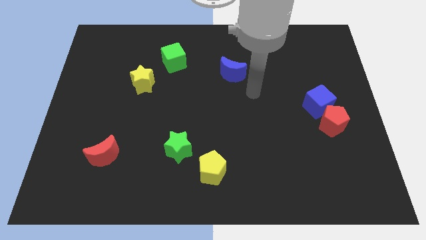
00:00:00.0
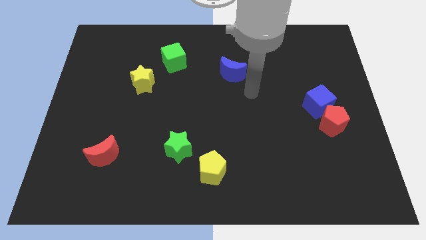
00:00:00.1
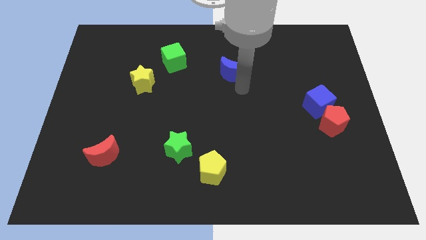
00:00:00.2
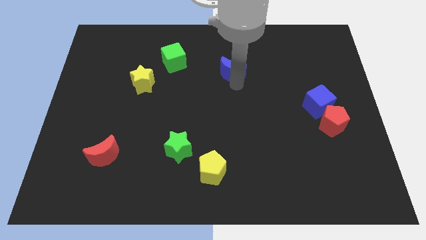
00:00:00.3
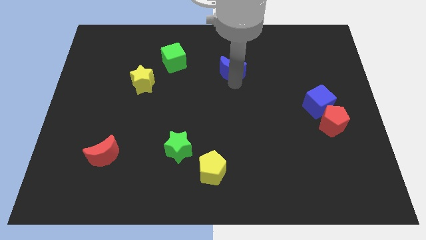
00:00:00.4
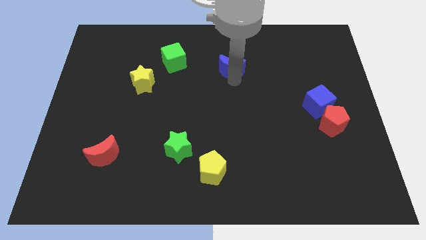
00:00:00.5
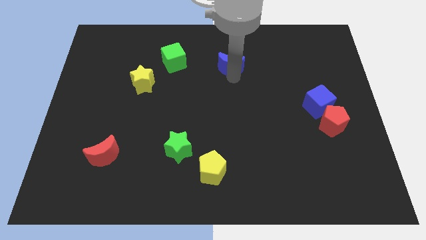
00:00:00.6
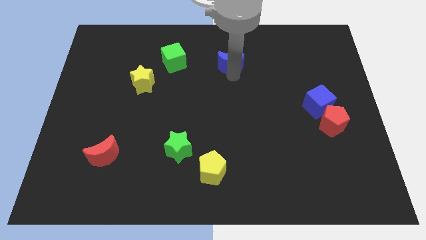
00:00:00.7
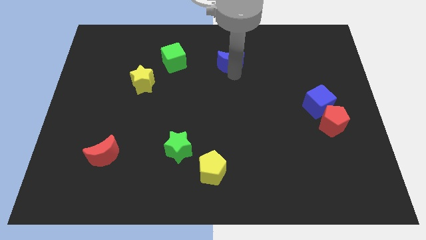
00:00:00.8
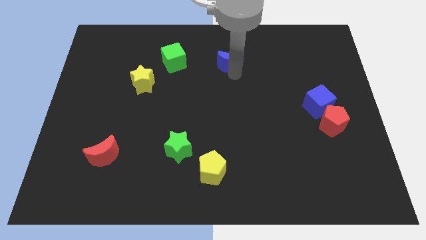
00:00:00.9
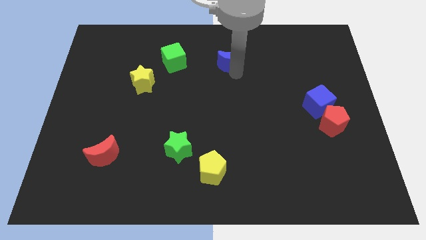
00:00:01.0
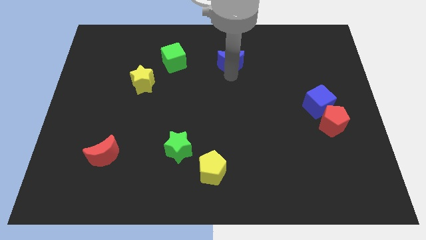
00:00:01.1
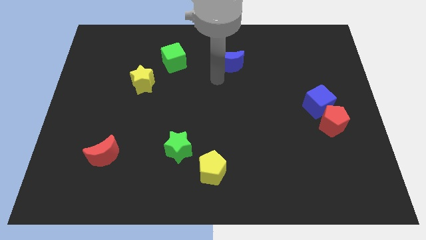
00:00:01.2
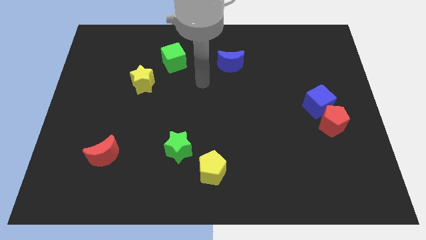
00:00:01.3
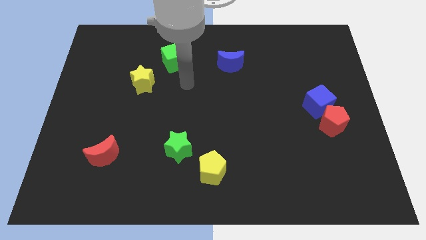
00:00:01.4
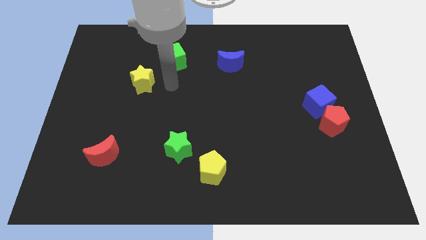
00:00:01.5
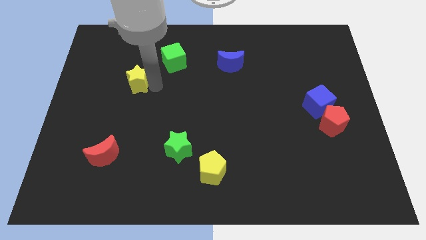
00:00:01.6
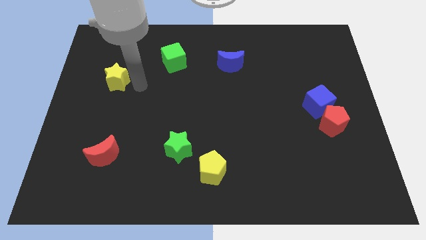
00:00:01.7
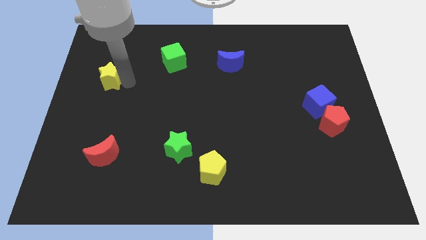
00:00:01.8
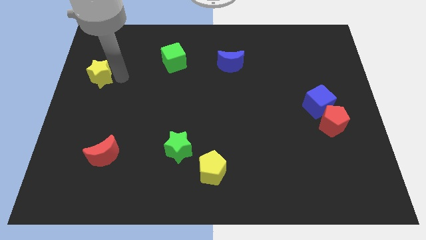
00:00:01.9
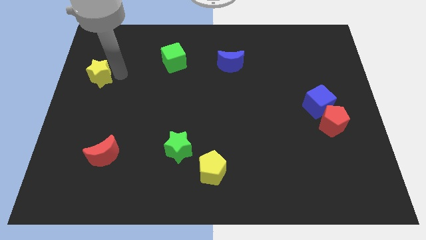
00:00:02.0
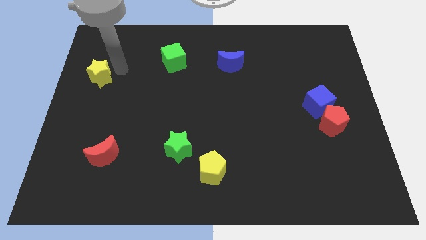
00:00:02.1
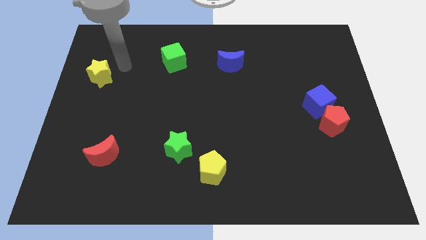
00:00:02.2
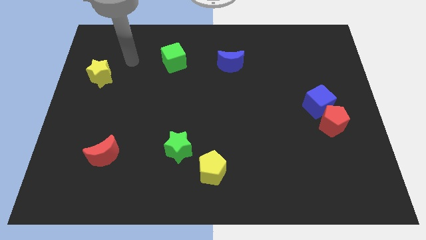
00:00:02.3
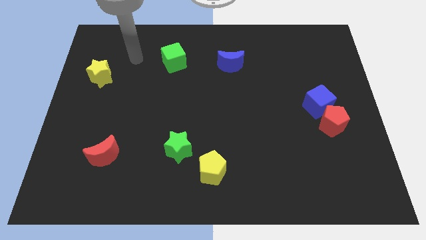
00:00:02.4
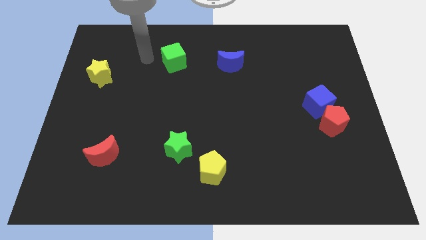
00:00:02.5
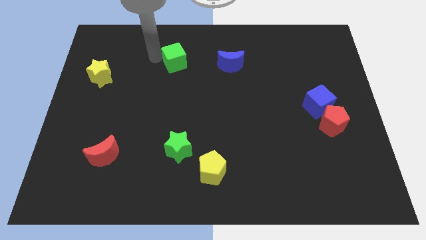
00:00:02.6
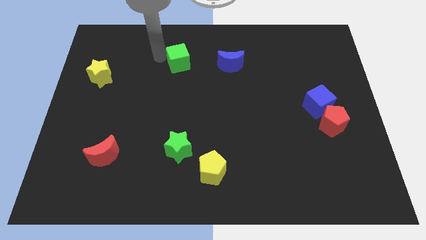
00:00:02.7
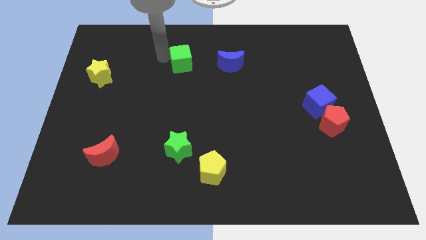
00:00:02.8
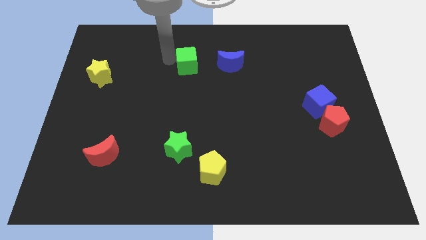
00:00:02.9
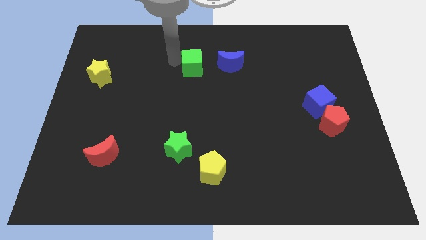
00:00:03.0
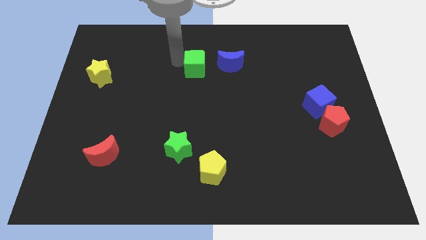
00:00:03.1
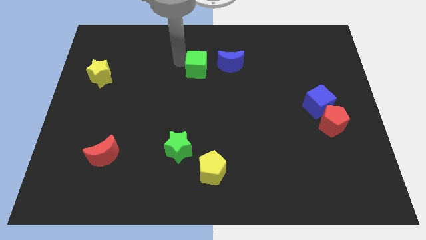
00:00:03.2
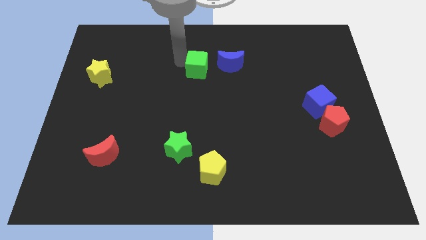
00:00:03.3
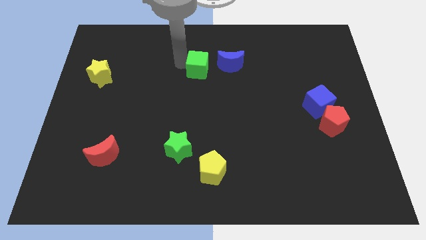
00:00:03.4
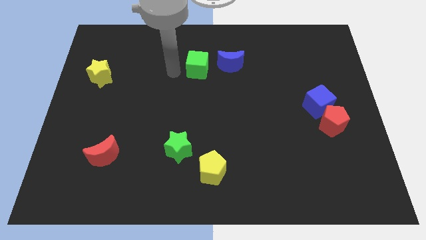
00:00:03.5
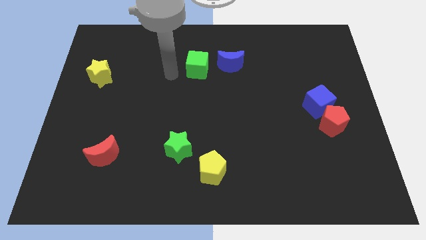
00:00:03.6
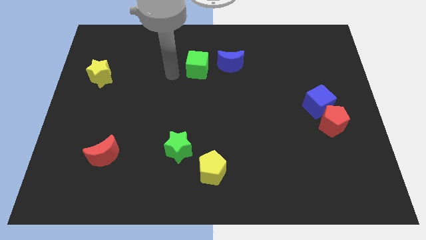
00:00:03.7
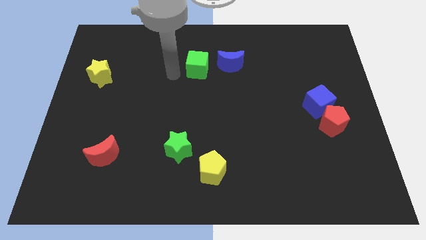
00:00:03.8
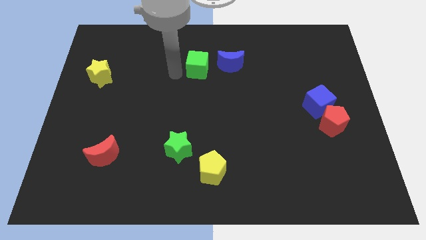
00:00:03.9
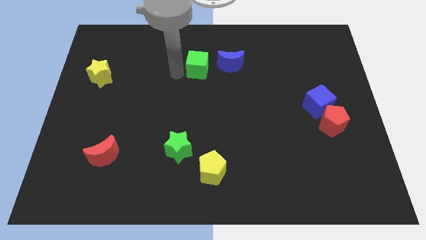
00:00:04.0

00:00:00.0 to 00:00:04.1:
push the green cube towards the blue moon

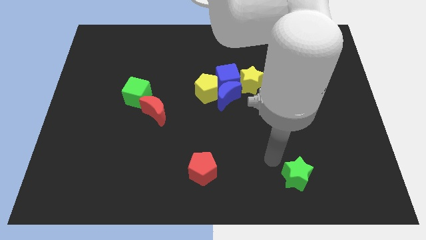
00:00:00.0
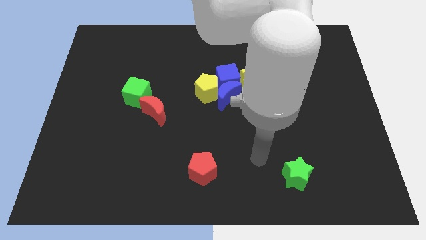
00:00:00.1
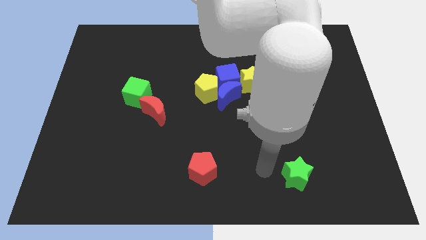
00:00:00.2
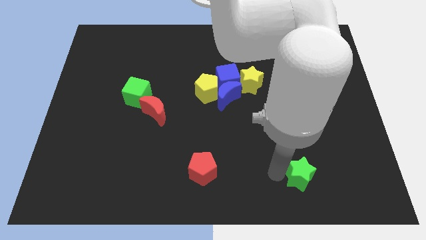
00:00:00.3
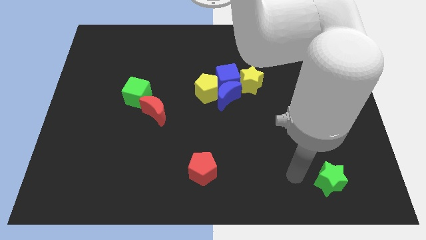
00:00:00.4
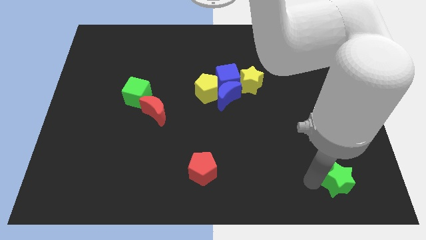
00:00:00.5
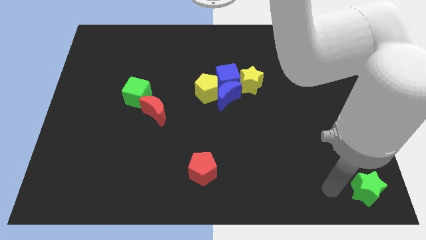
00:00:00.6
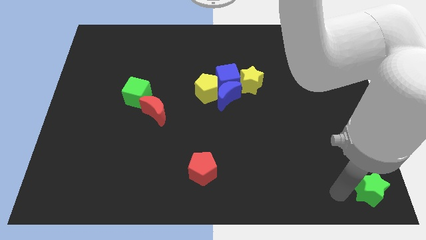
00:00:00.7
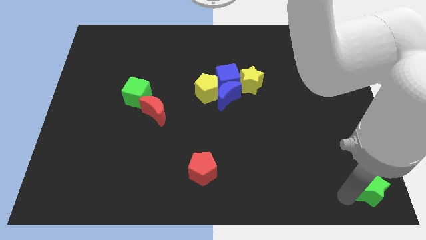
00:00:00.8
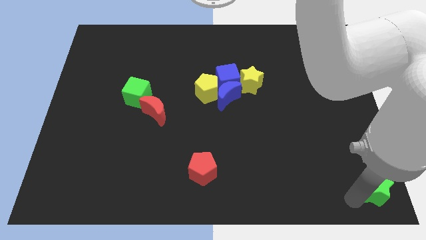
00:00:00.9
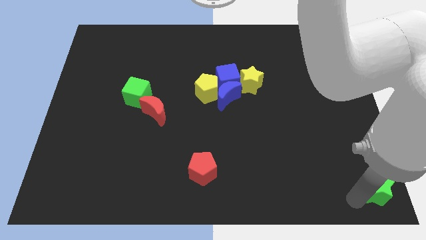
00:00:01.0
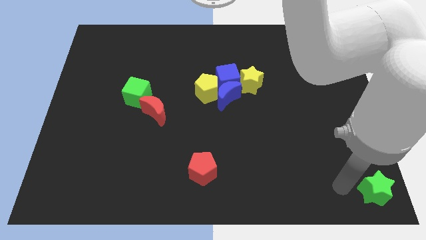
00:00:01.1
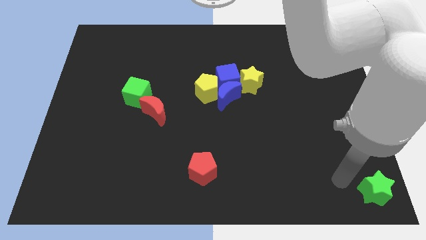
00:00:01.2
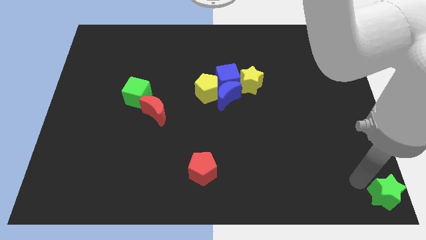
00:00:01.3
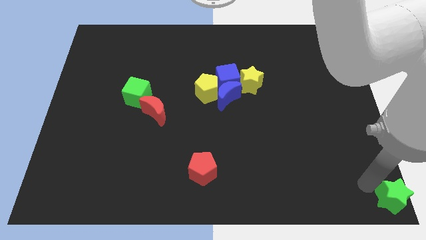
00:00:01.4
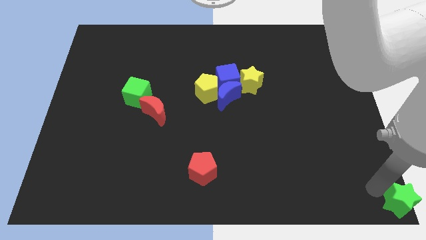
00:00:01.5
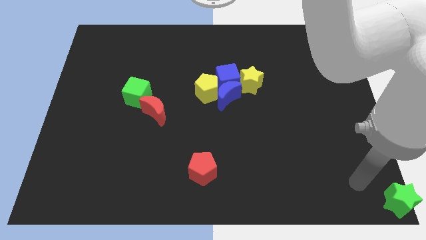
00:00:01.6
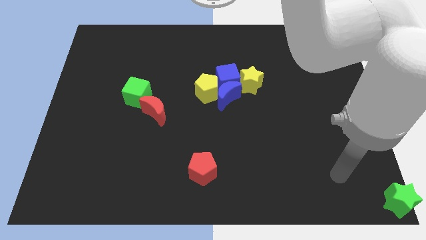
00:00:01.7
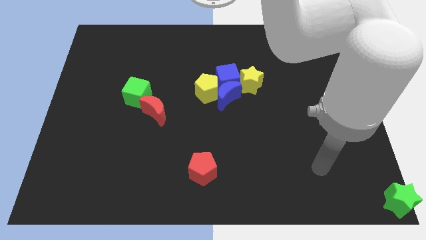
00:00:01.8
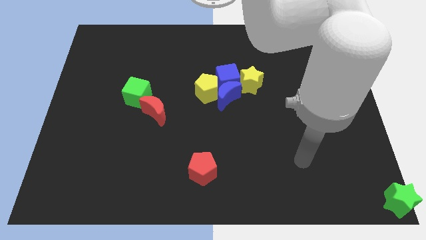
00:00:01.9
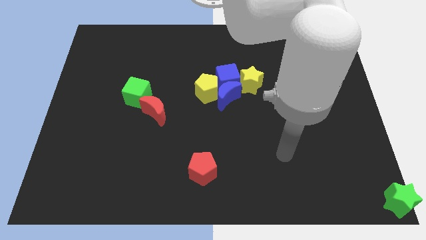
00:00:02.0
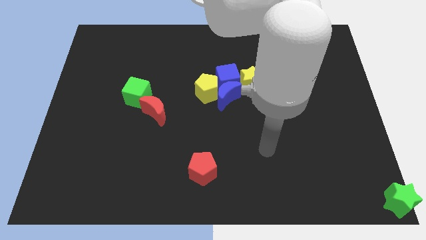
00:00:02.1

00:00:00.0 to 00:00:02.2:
push green star to the bottom right corner of the board

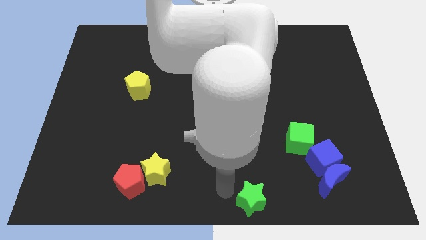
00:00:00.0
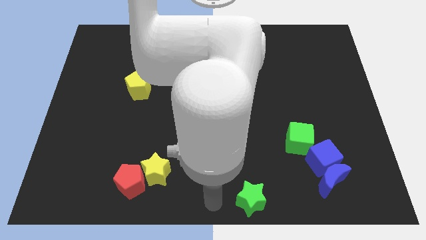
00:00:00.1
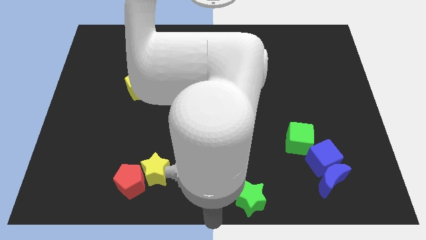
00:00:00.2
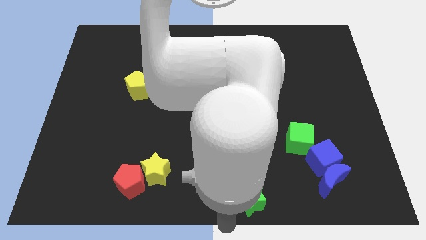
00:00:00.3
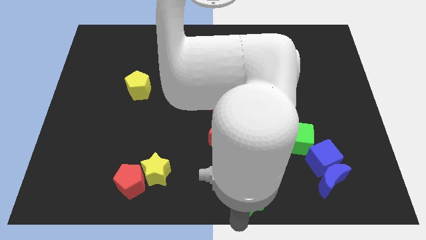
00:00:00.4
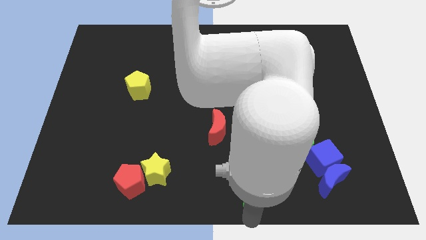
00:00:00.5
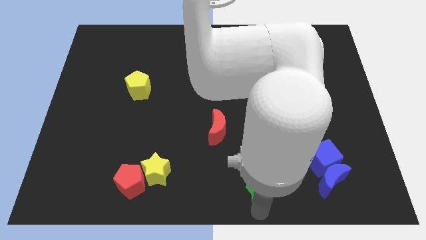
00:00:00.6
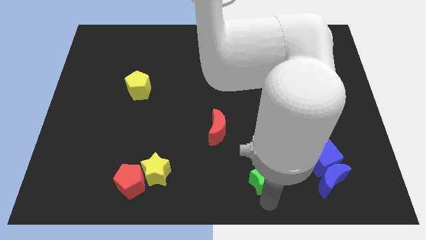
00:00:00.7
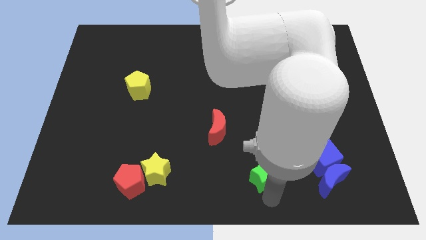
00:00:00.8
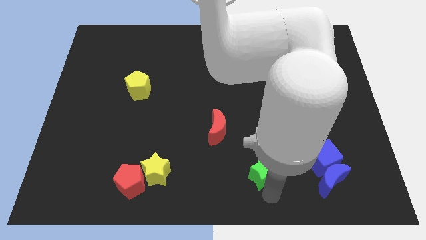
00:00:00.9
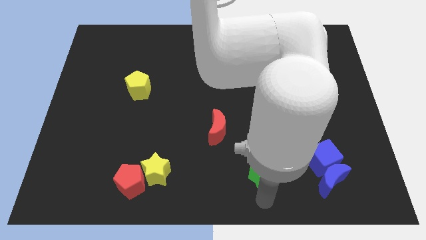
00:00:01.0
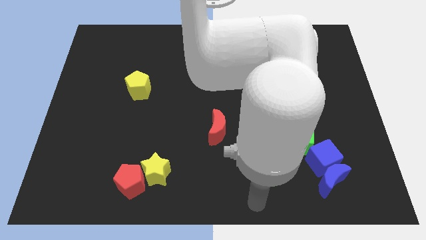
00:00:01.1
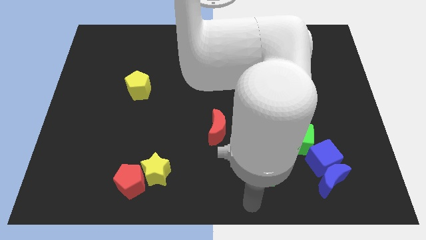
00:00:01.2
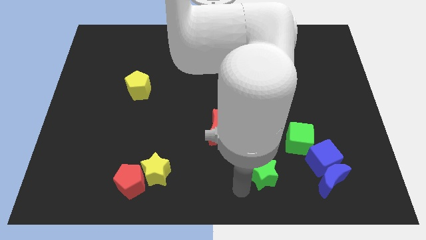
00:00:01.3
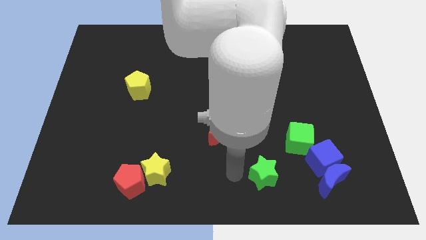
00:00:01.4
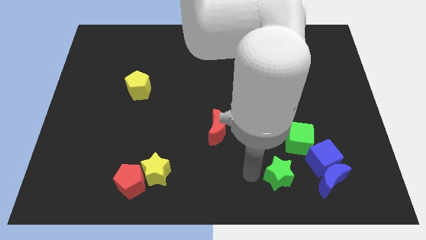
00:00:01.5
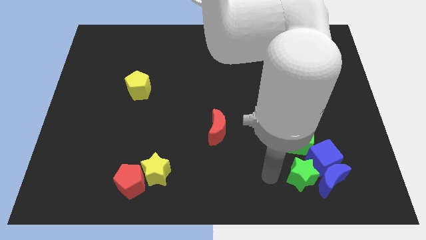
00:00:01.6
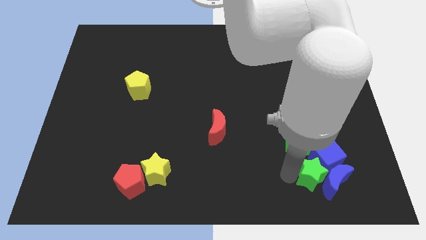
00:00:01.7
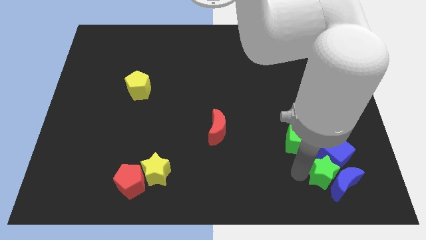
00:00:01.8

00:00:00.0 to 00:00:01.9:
move the green star close to the blue cube and blue crescent

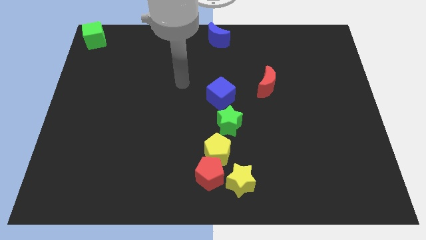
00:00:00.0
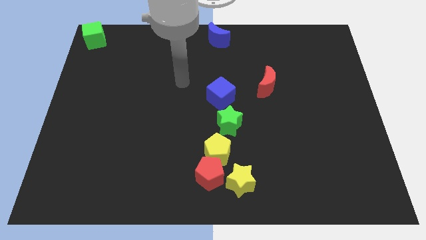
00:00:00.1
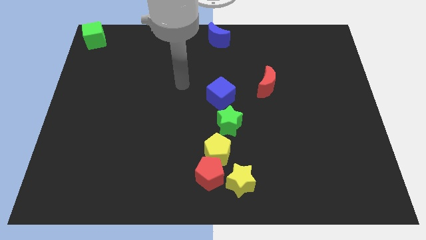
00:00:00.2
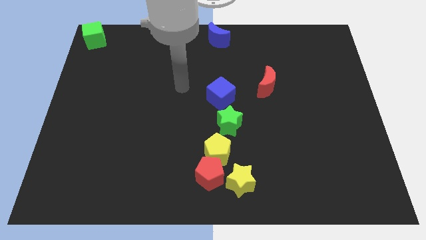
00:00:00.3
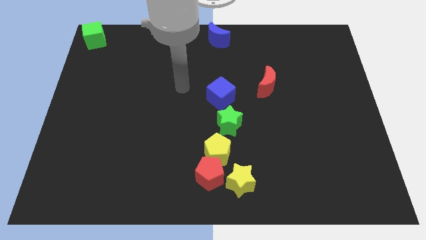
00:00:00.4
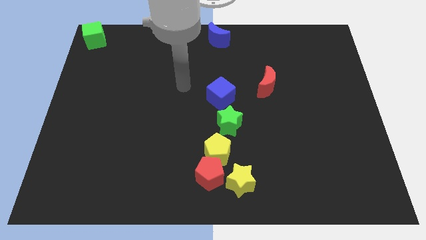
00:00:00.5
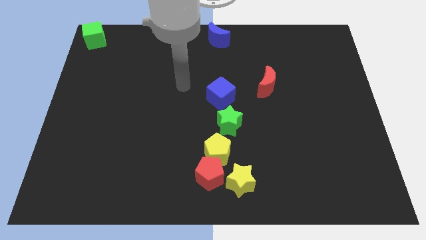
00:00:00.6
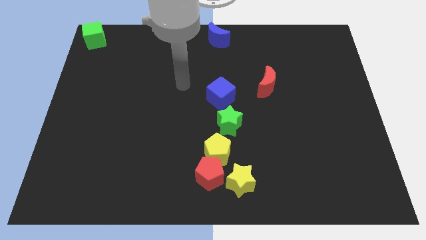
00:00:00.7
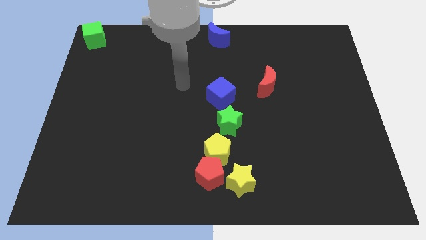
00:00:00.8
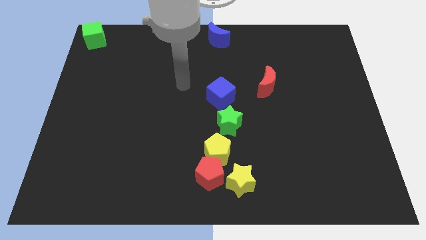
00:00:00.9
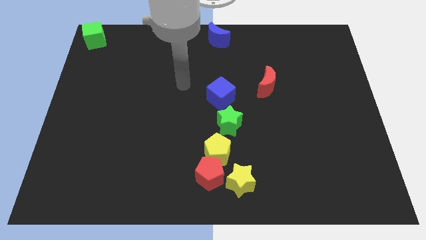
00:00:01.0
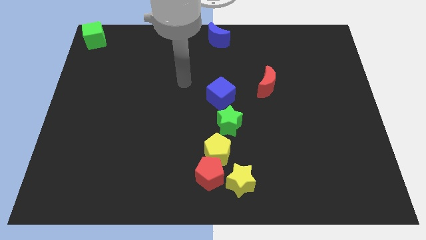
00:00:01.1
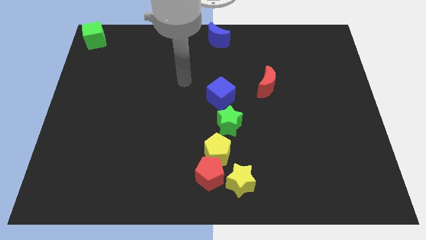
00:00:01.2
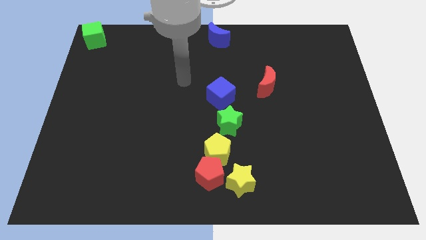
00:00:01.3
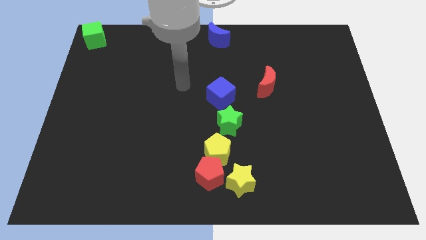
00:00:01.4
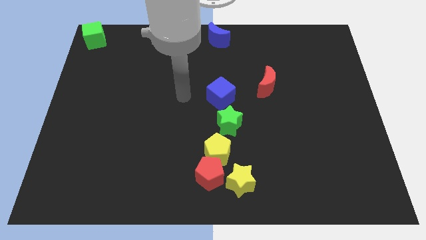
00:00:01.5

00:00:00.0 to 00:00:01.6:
place arm on left side of blue cube
